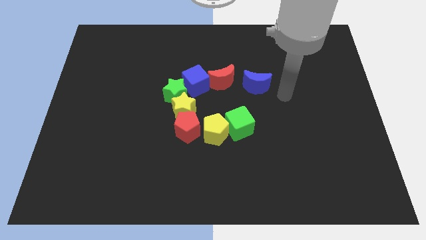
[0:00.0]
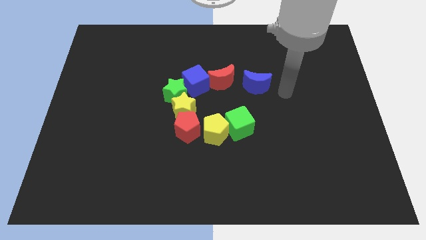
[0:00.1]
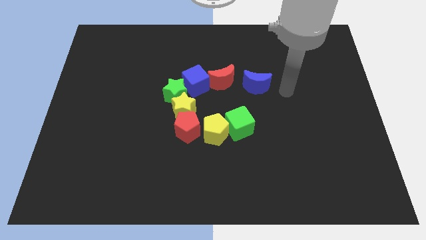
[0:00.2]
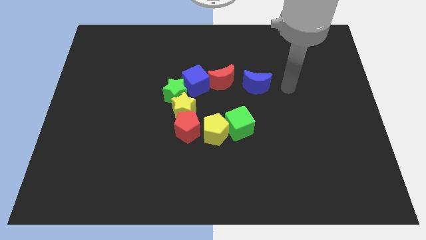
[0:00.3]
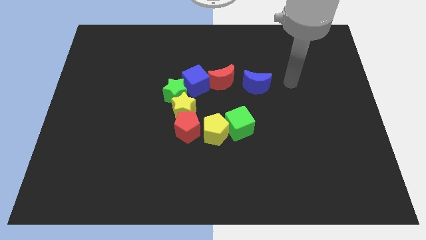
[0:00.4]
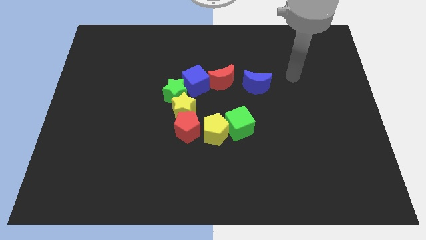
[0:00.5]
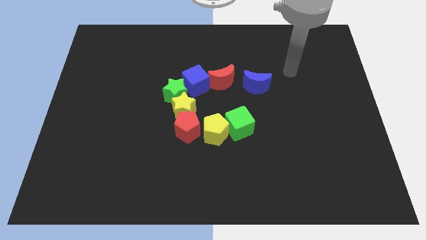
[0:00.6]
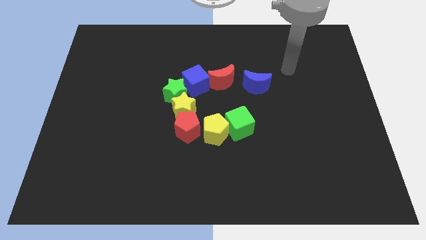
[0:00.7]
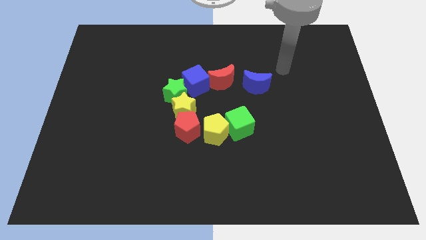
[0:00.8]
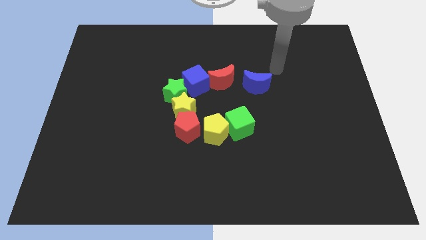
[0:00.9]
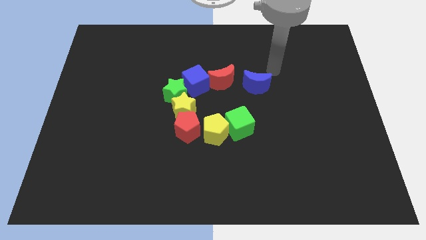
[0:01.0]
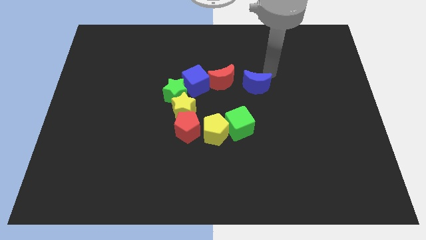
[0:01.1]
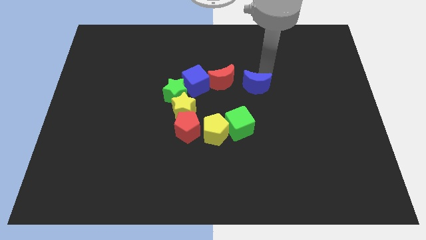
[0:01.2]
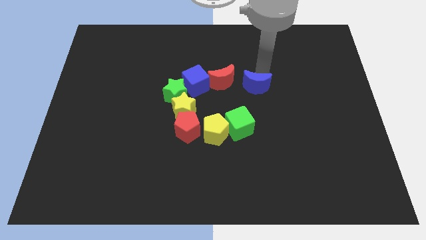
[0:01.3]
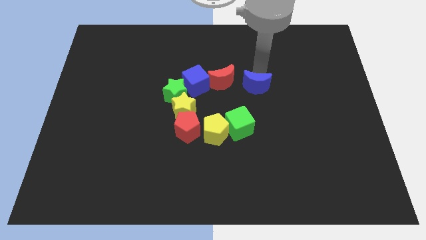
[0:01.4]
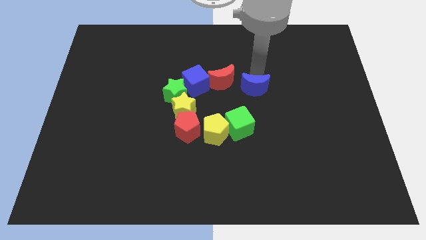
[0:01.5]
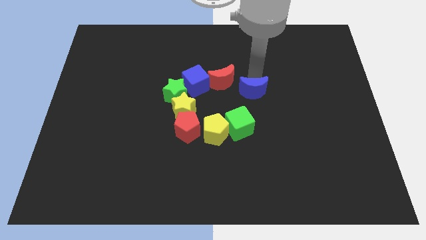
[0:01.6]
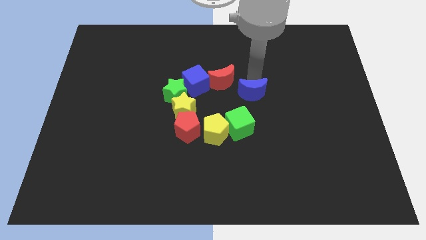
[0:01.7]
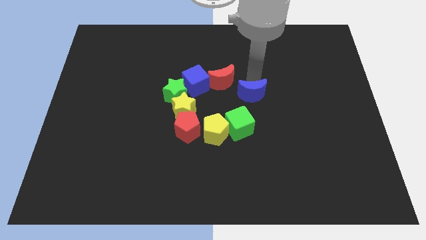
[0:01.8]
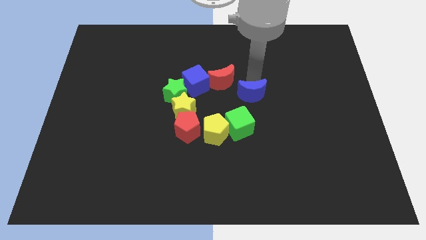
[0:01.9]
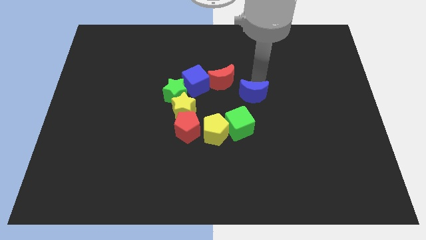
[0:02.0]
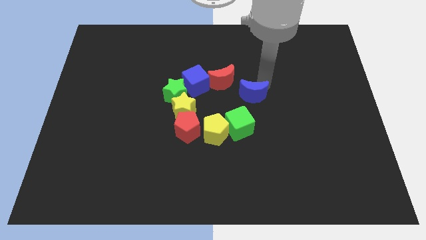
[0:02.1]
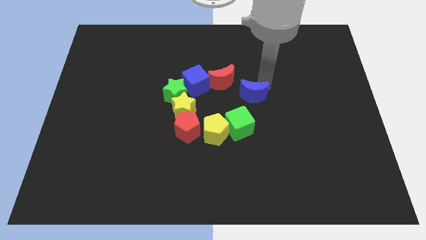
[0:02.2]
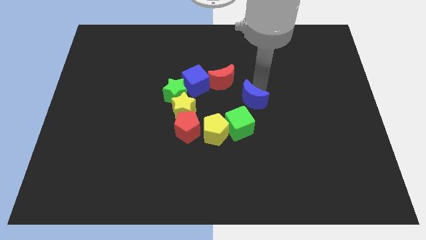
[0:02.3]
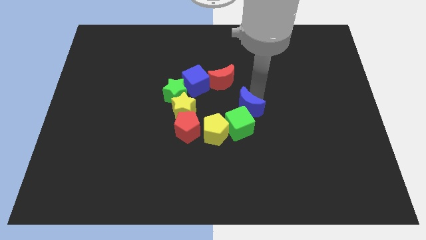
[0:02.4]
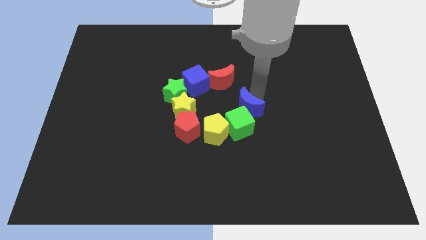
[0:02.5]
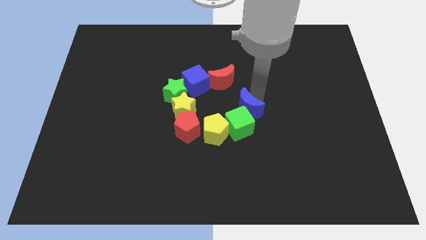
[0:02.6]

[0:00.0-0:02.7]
place blue moon beside the green cube

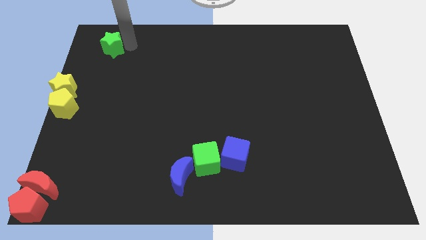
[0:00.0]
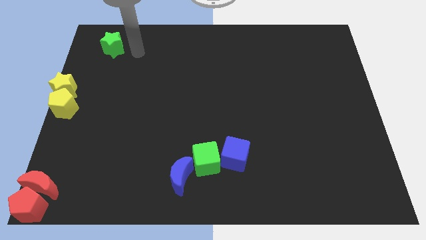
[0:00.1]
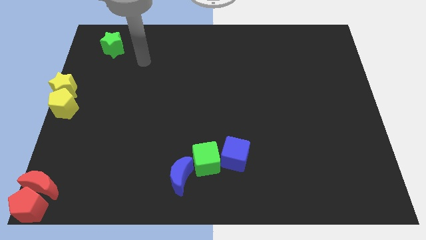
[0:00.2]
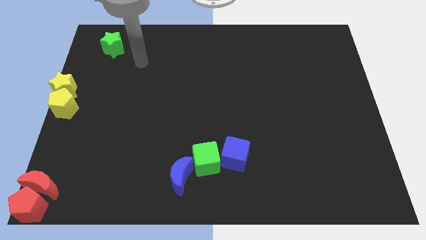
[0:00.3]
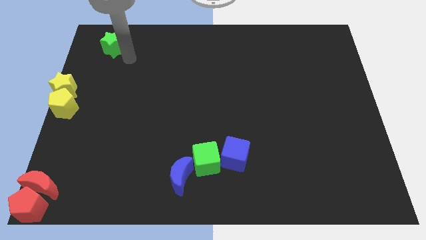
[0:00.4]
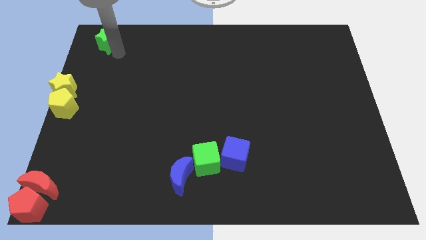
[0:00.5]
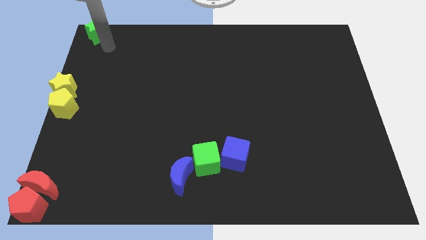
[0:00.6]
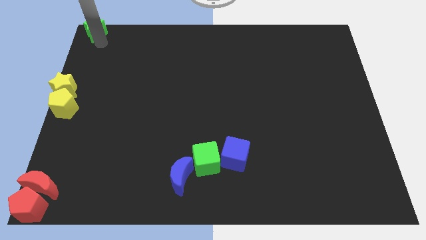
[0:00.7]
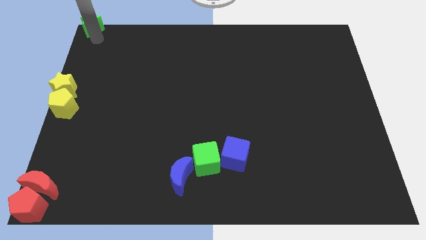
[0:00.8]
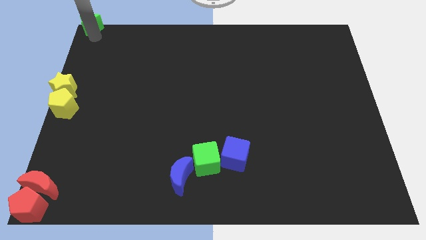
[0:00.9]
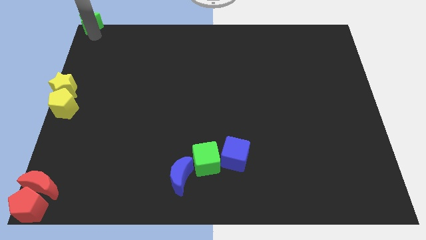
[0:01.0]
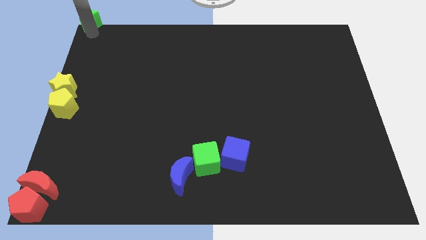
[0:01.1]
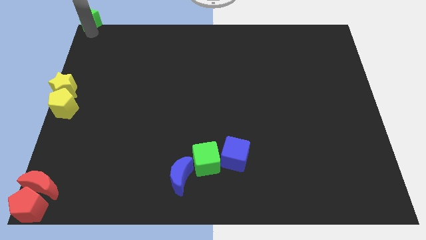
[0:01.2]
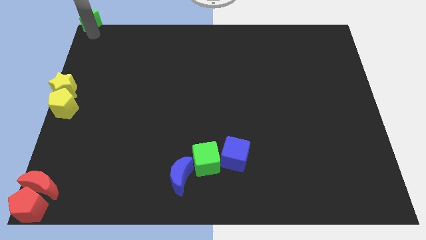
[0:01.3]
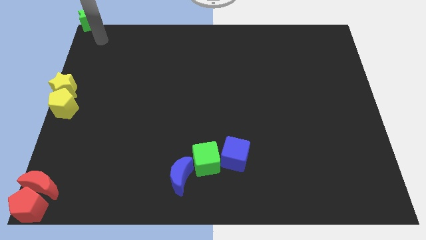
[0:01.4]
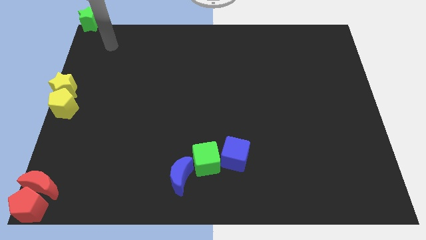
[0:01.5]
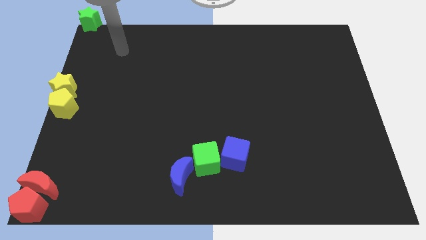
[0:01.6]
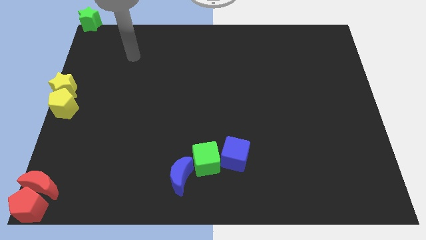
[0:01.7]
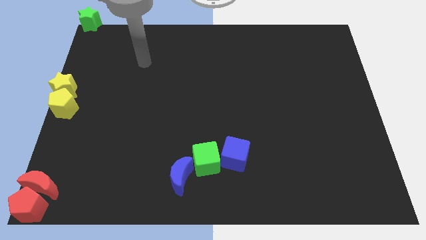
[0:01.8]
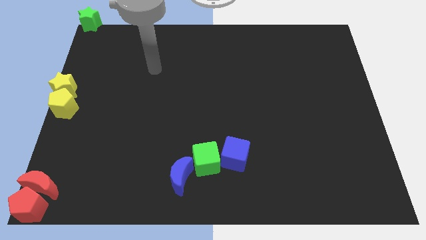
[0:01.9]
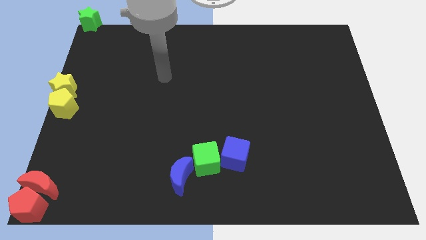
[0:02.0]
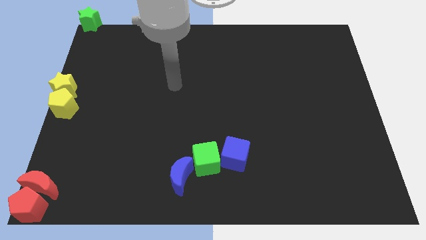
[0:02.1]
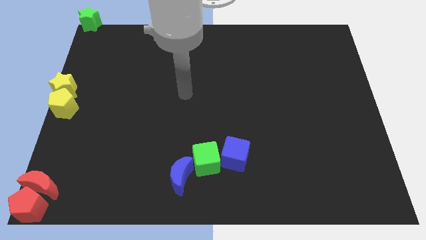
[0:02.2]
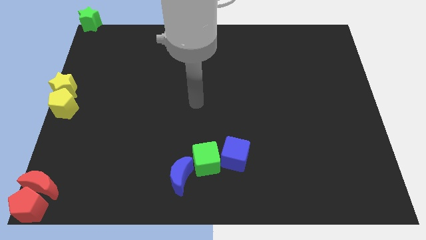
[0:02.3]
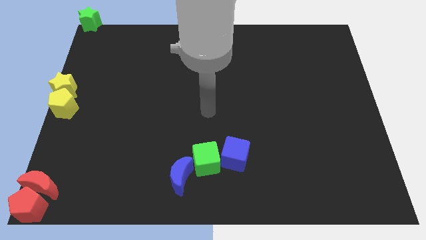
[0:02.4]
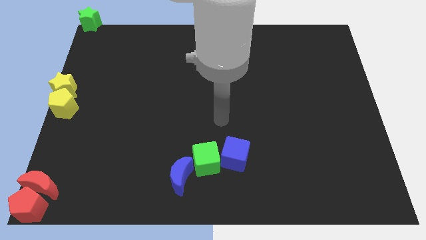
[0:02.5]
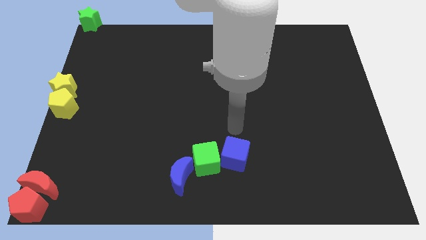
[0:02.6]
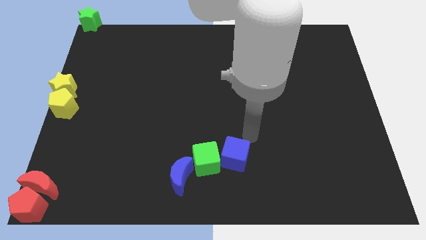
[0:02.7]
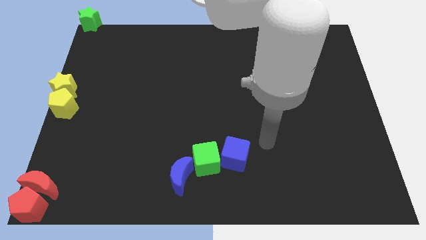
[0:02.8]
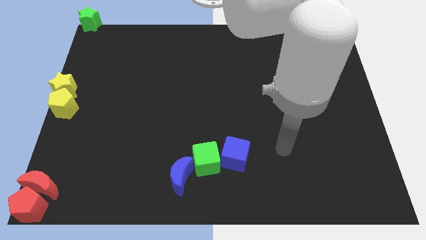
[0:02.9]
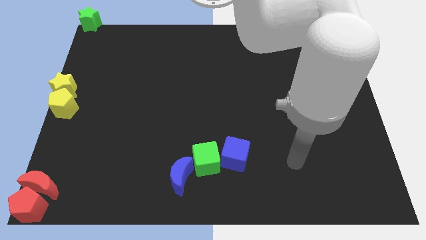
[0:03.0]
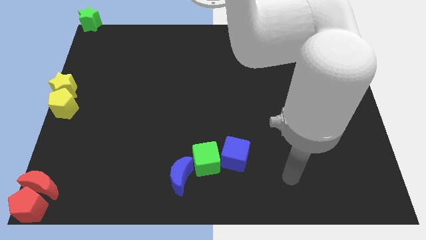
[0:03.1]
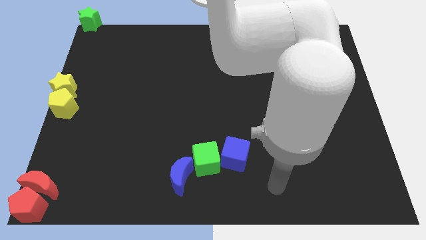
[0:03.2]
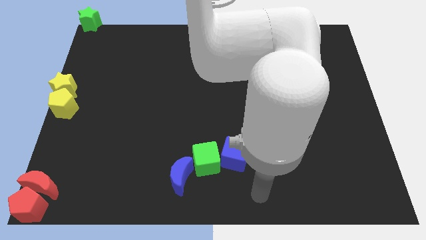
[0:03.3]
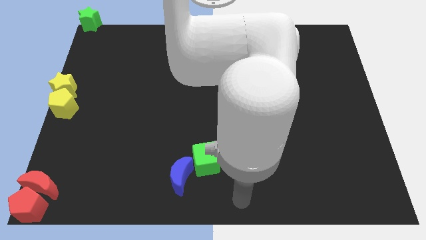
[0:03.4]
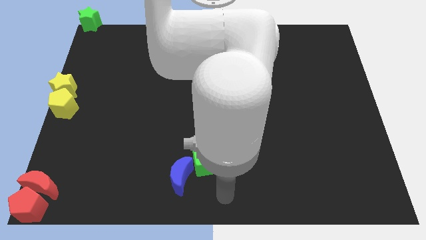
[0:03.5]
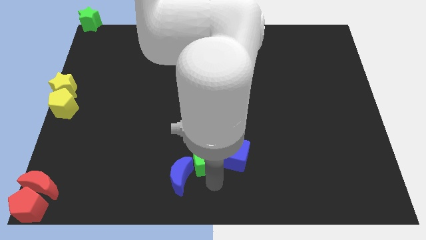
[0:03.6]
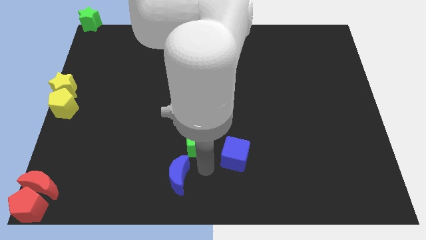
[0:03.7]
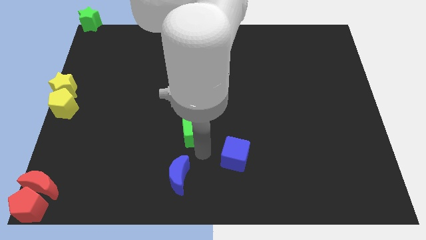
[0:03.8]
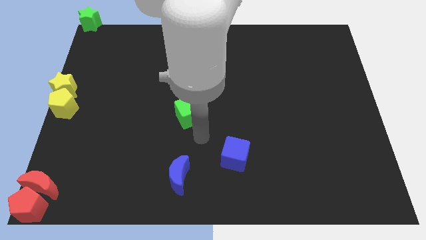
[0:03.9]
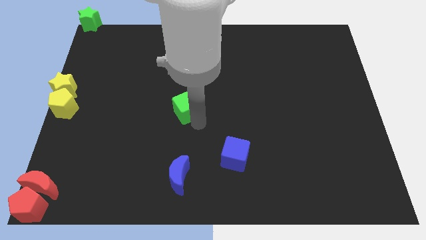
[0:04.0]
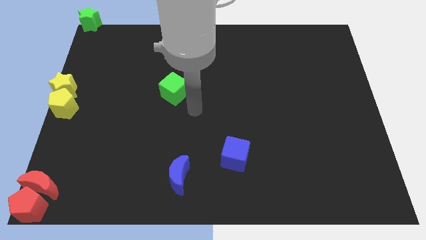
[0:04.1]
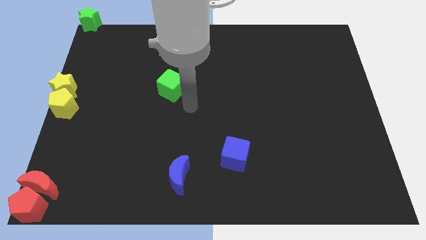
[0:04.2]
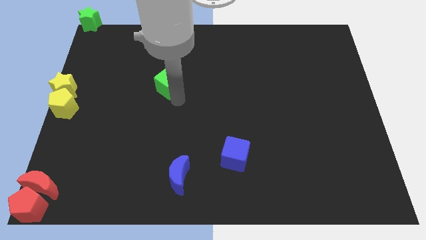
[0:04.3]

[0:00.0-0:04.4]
separate the green cube from the blue blocks

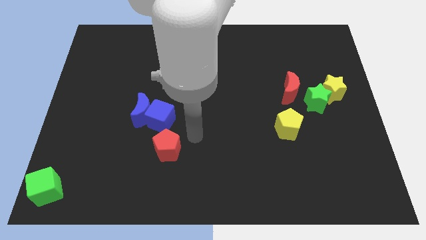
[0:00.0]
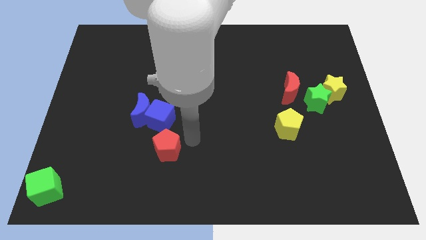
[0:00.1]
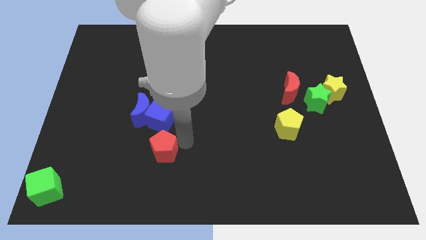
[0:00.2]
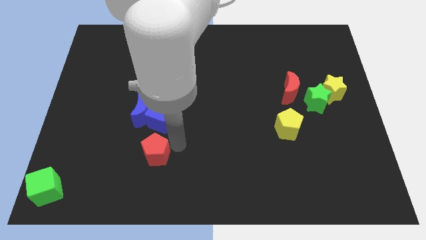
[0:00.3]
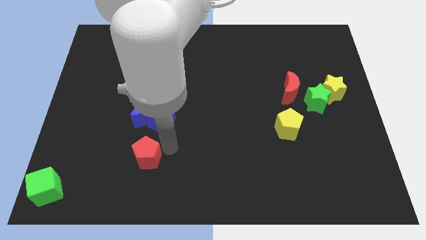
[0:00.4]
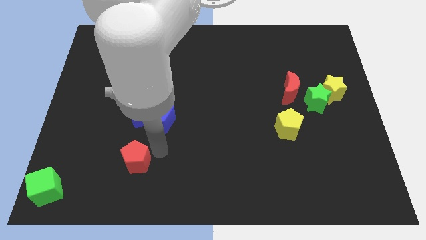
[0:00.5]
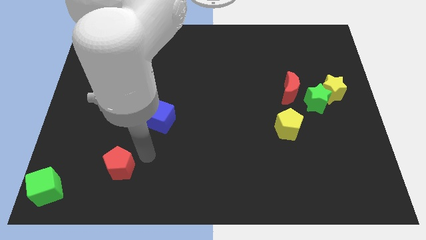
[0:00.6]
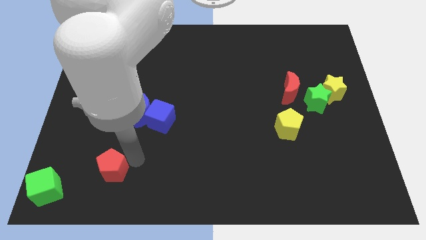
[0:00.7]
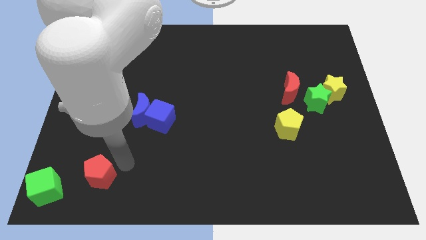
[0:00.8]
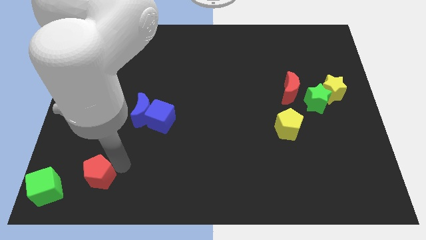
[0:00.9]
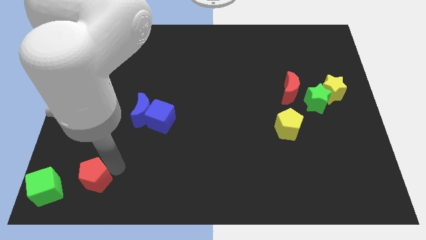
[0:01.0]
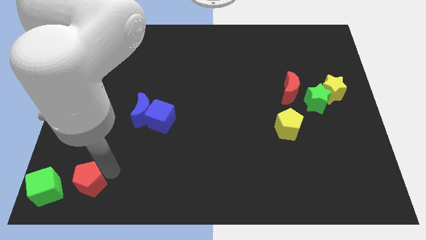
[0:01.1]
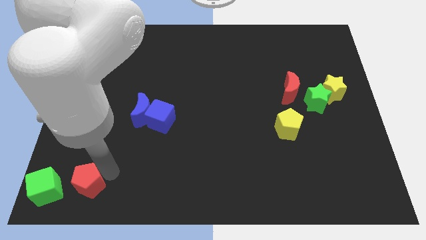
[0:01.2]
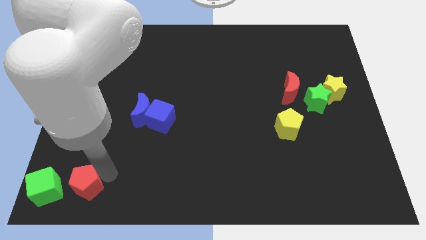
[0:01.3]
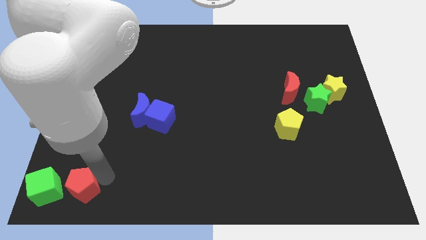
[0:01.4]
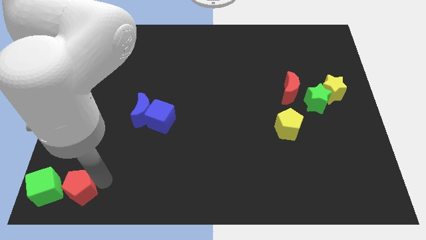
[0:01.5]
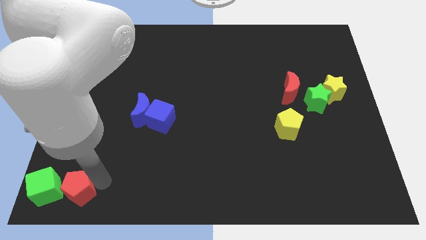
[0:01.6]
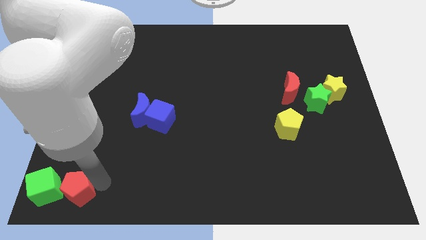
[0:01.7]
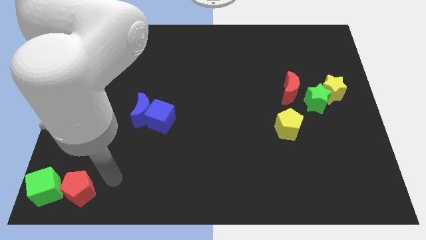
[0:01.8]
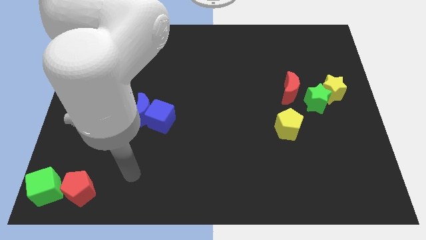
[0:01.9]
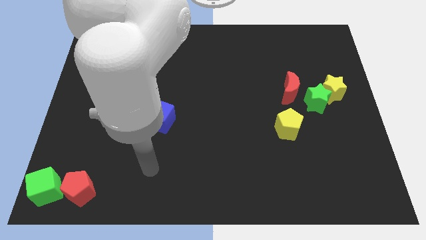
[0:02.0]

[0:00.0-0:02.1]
push the red pentagon into the green cube
